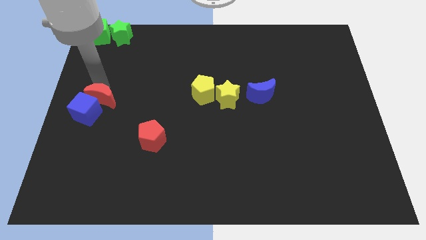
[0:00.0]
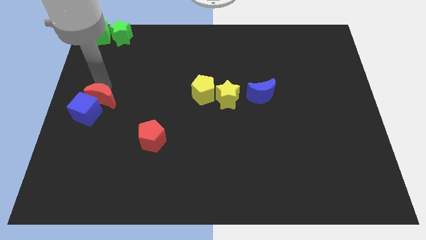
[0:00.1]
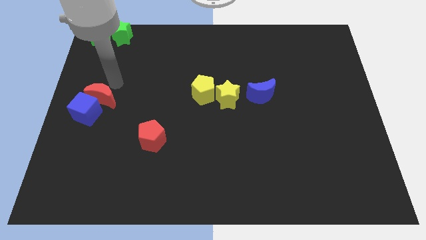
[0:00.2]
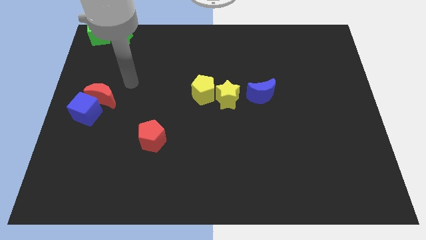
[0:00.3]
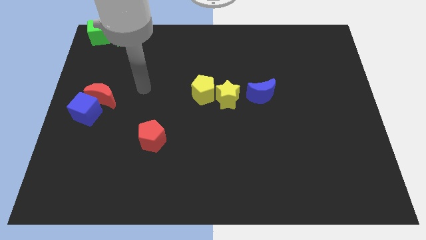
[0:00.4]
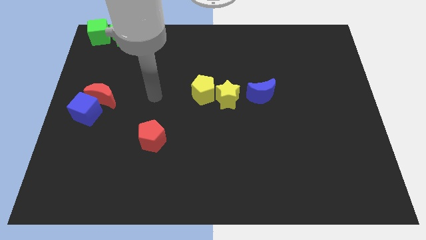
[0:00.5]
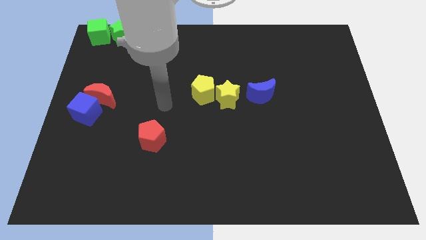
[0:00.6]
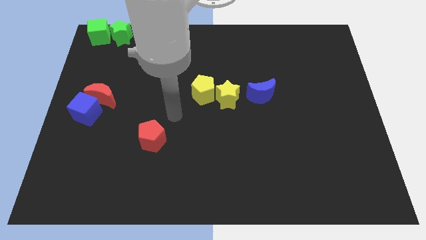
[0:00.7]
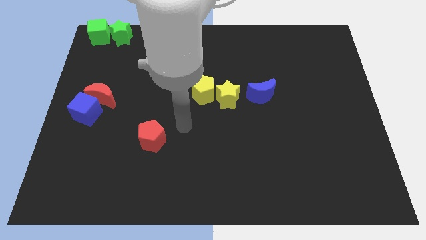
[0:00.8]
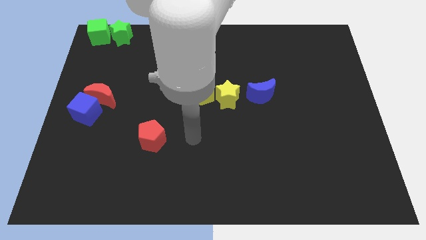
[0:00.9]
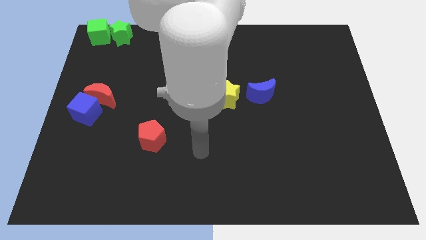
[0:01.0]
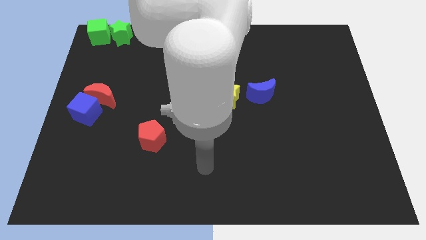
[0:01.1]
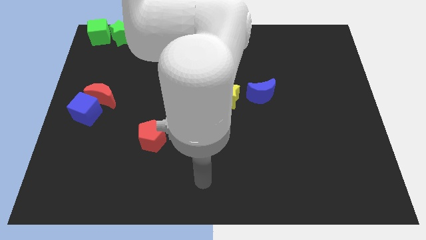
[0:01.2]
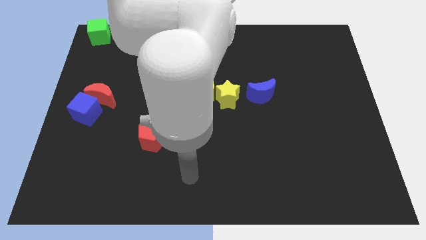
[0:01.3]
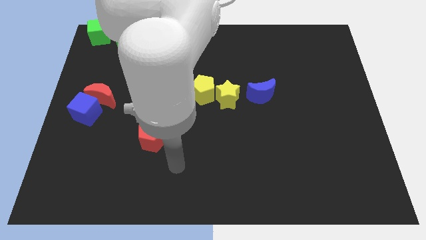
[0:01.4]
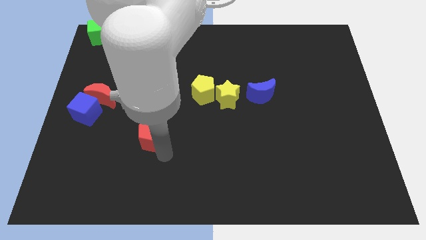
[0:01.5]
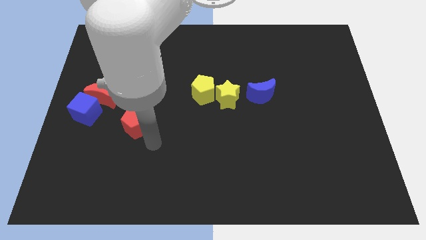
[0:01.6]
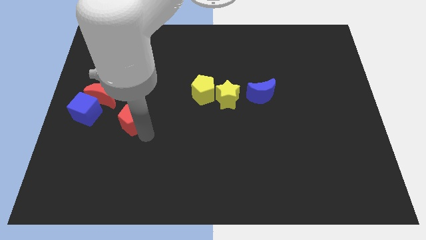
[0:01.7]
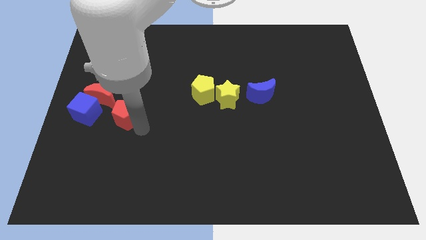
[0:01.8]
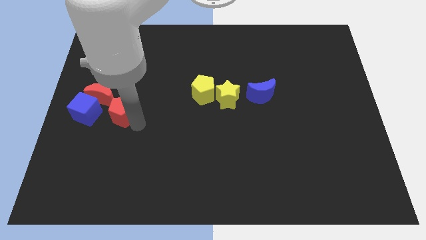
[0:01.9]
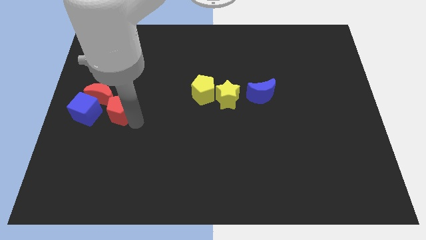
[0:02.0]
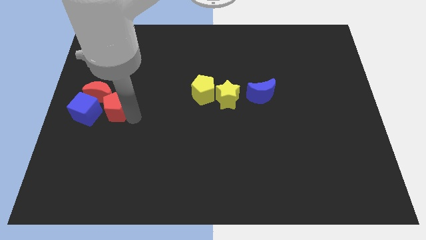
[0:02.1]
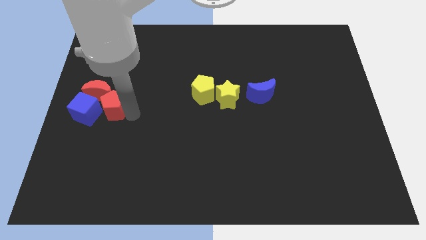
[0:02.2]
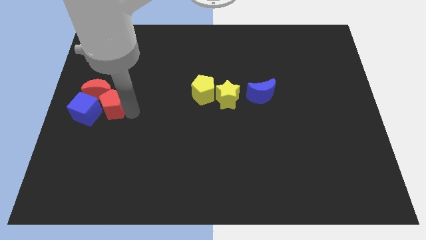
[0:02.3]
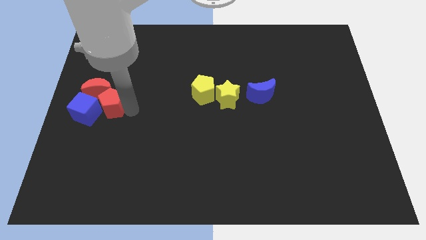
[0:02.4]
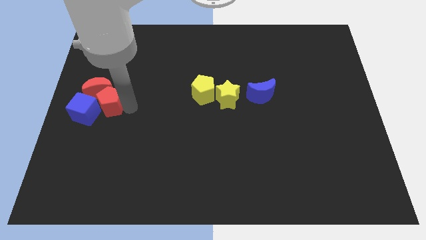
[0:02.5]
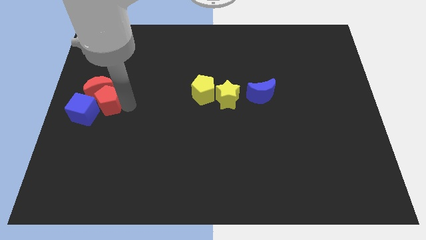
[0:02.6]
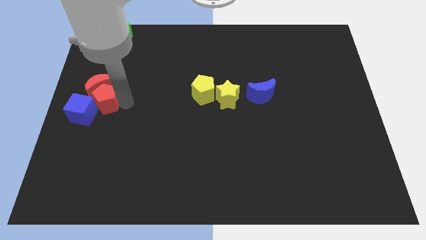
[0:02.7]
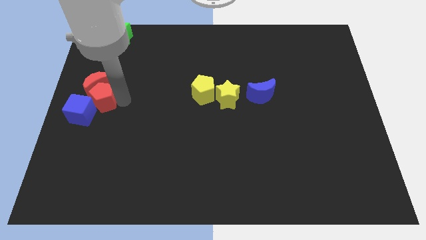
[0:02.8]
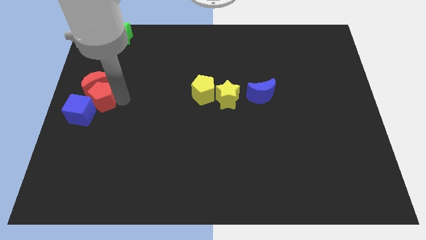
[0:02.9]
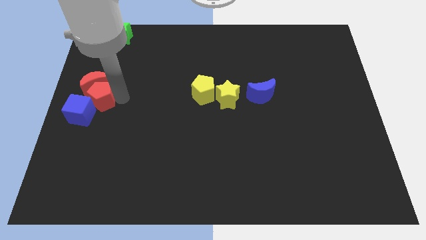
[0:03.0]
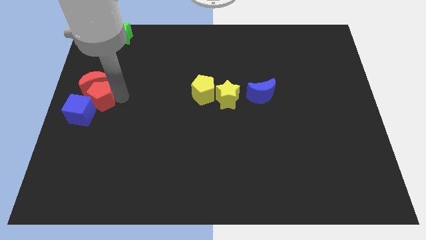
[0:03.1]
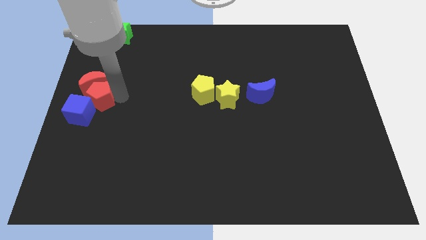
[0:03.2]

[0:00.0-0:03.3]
move the red pentagon into the red moon

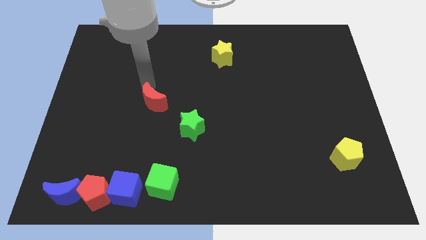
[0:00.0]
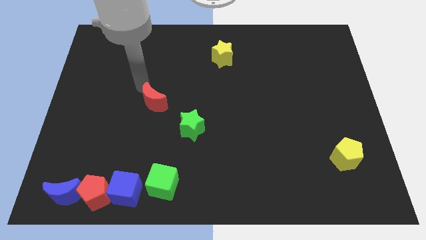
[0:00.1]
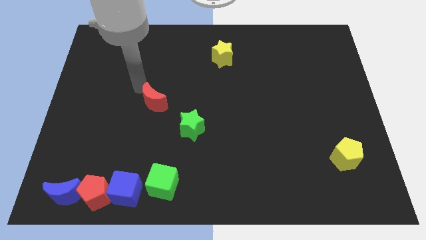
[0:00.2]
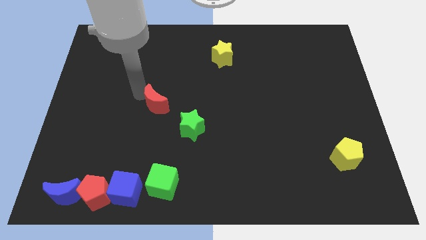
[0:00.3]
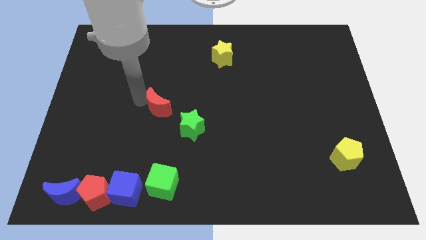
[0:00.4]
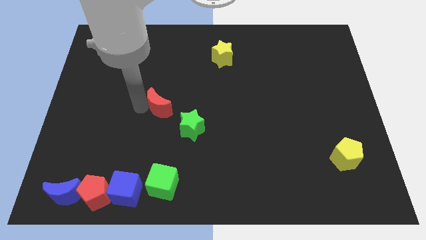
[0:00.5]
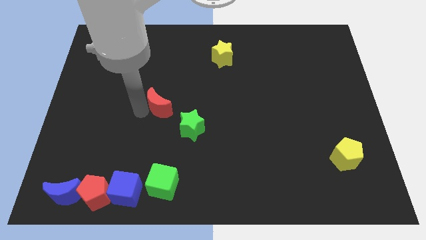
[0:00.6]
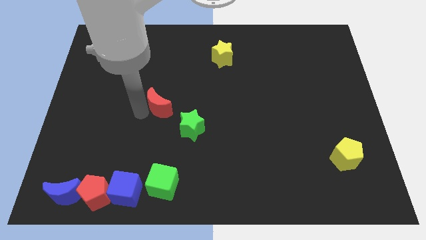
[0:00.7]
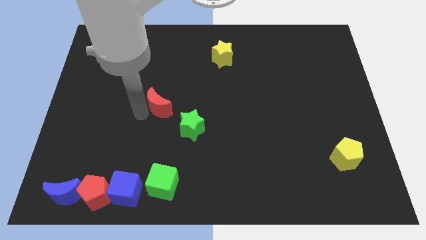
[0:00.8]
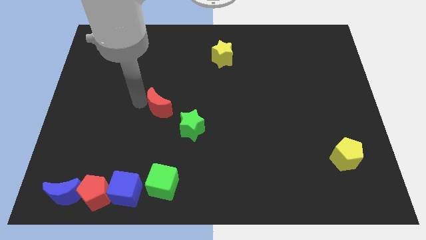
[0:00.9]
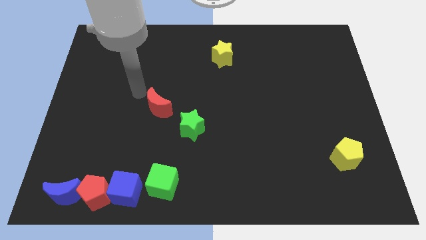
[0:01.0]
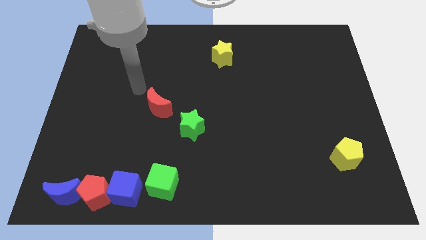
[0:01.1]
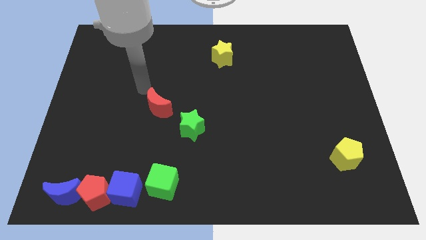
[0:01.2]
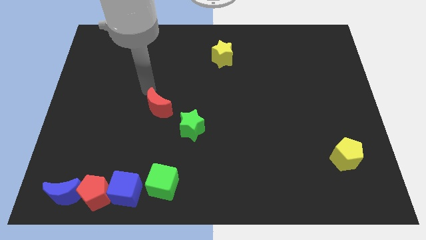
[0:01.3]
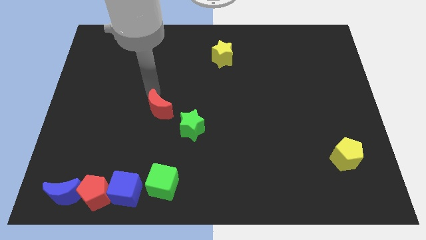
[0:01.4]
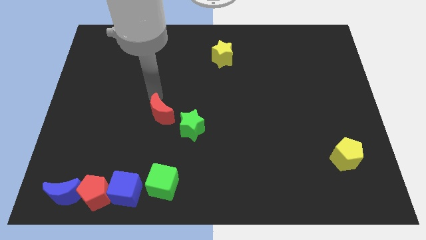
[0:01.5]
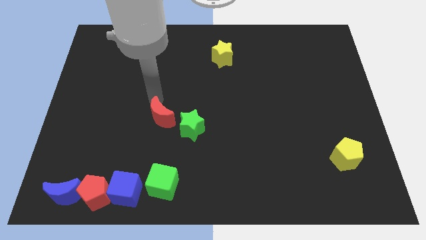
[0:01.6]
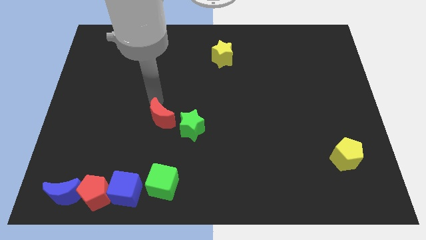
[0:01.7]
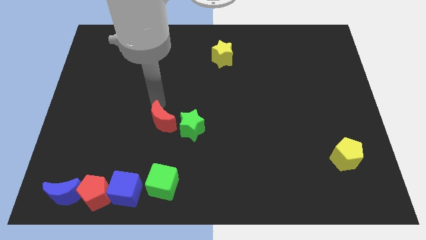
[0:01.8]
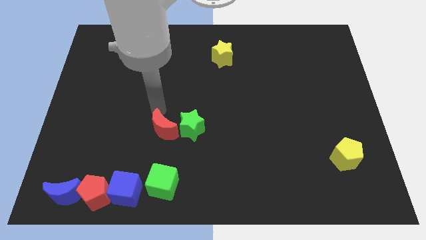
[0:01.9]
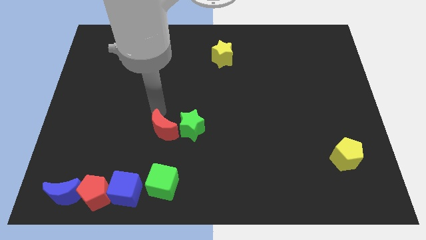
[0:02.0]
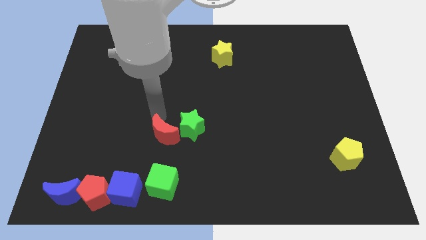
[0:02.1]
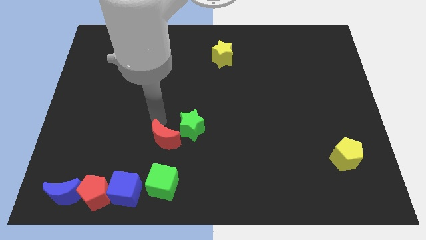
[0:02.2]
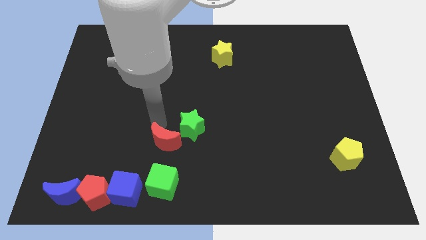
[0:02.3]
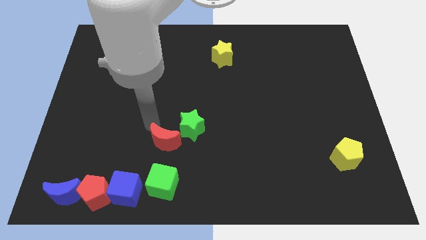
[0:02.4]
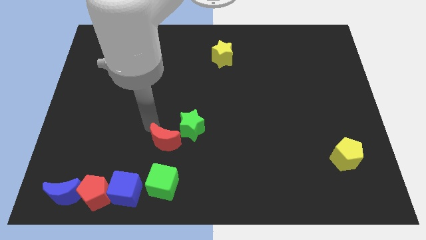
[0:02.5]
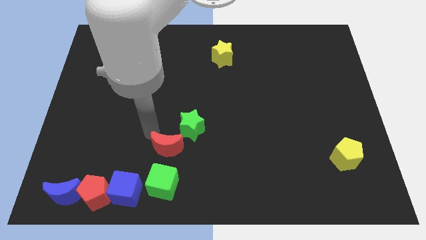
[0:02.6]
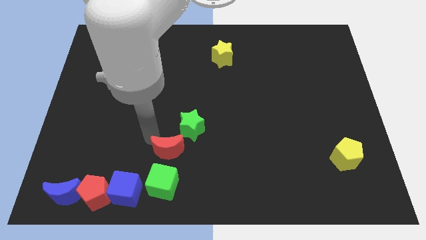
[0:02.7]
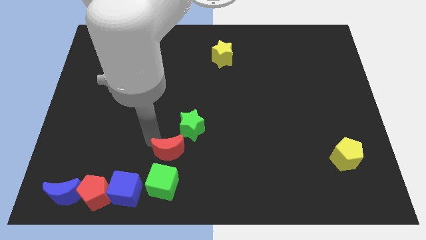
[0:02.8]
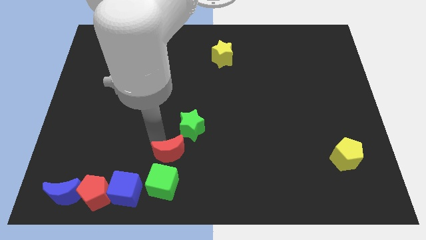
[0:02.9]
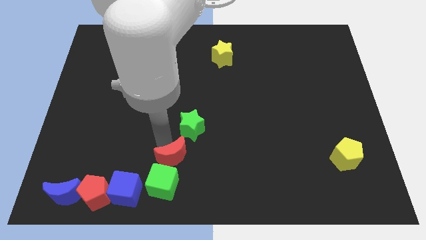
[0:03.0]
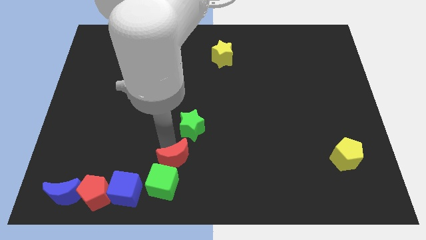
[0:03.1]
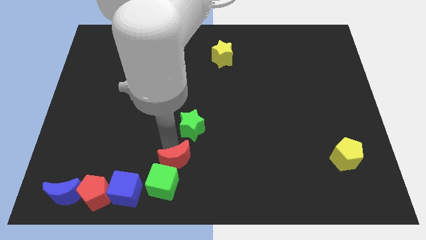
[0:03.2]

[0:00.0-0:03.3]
place the red moon between green star and green cube

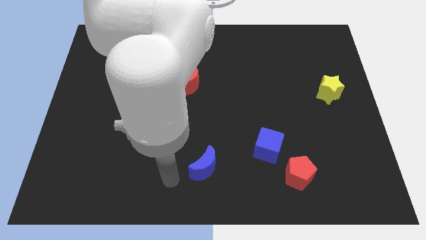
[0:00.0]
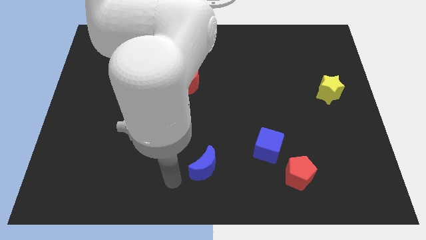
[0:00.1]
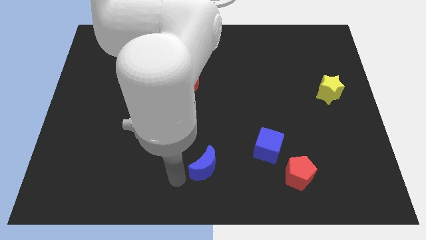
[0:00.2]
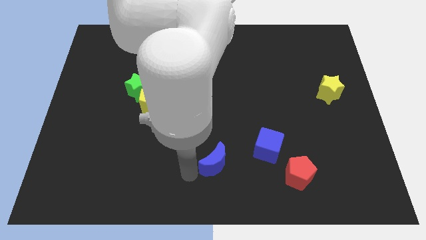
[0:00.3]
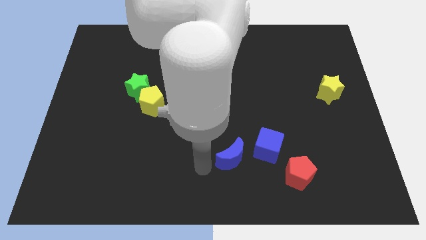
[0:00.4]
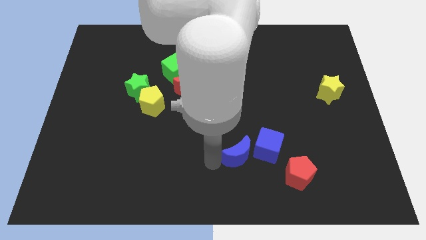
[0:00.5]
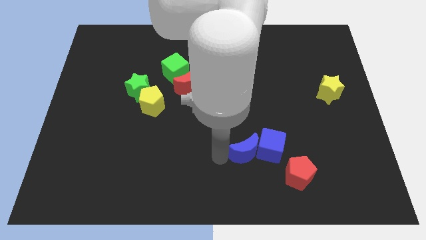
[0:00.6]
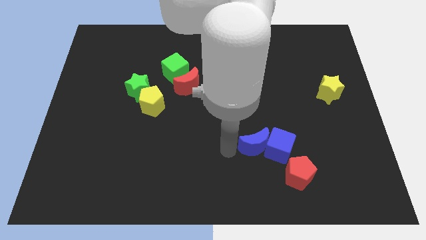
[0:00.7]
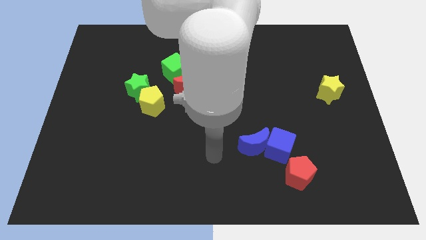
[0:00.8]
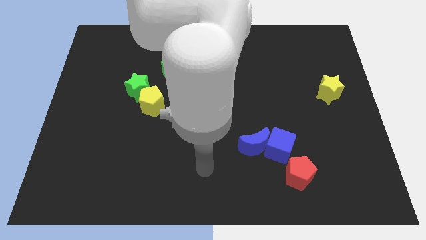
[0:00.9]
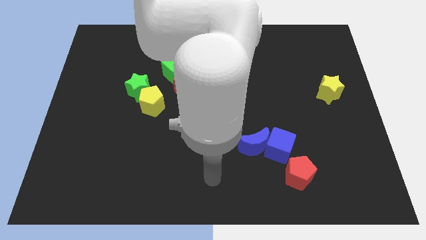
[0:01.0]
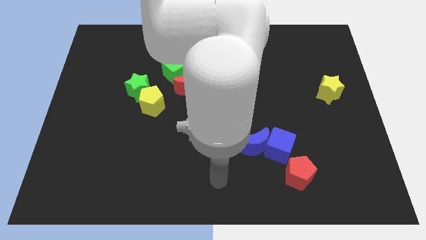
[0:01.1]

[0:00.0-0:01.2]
push blue crescent into the blue cube

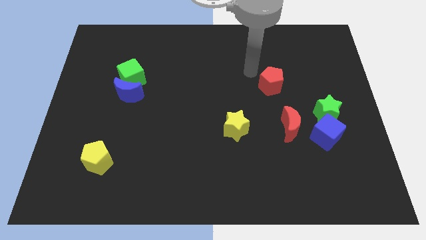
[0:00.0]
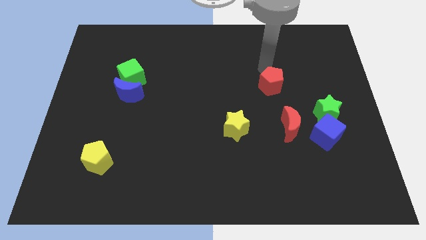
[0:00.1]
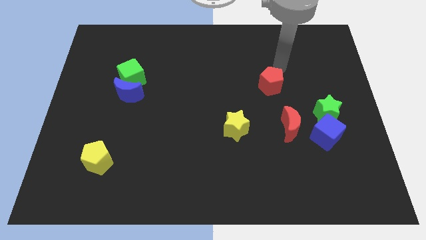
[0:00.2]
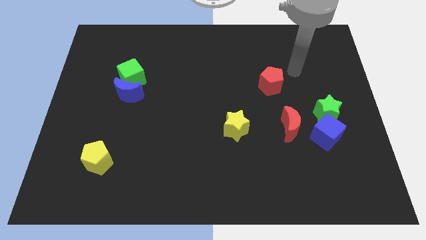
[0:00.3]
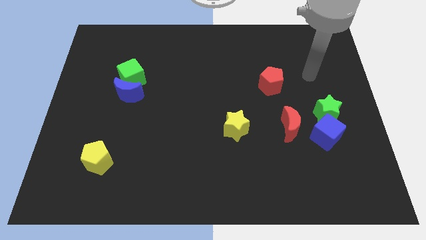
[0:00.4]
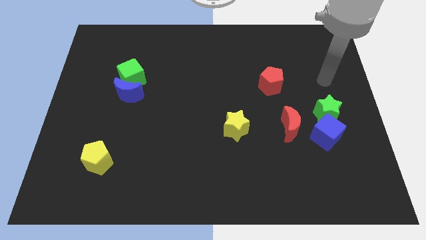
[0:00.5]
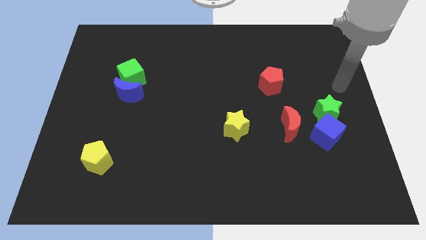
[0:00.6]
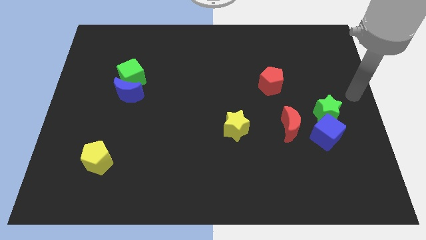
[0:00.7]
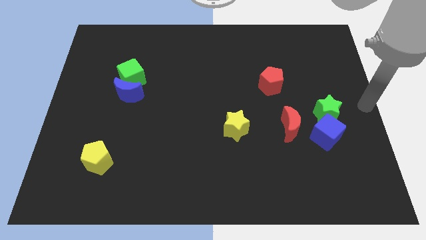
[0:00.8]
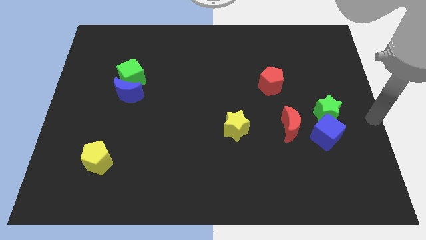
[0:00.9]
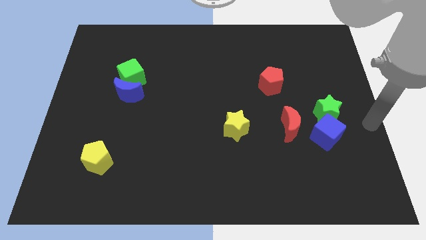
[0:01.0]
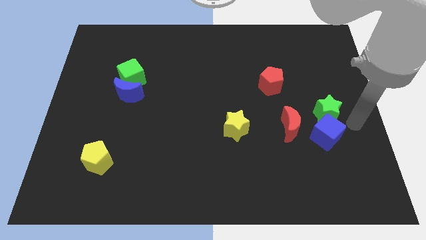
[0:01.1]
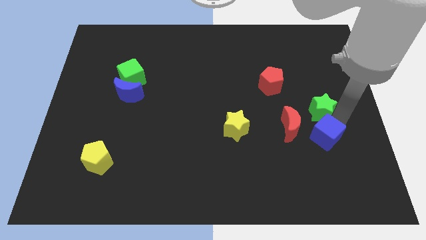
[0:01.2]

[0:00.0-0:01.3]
touch the right side of the green star
